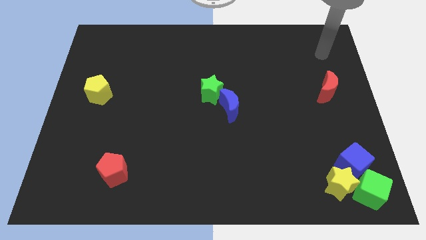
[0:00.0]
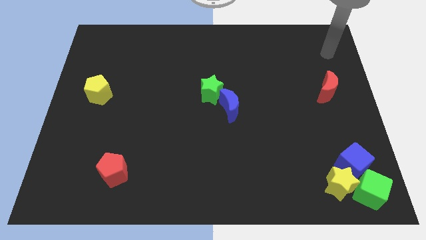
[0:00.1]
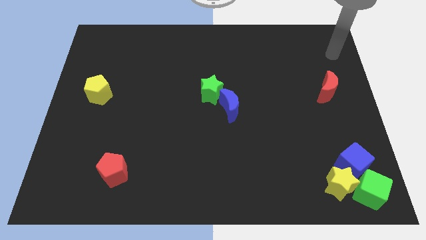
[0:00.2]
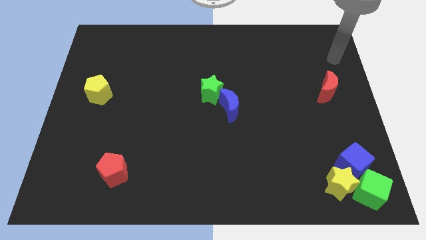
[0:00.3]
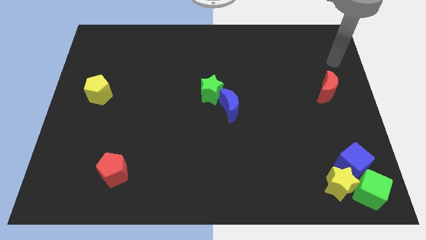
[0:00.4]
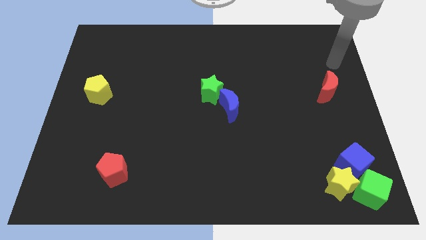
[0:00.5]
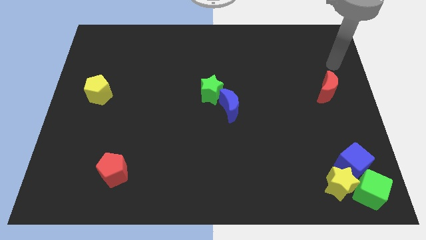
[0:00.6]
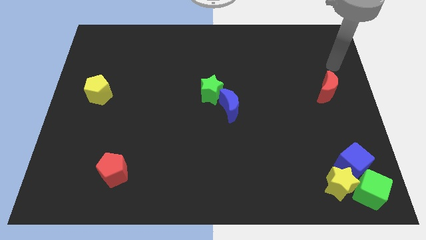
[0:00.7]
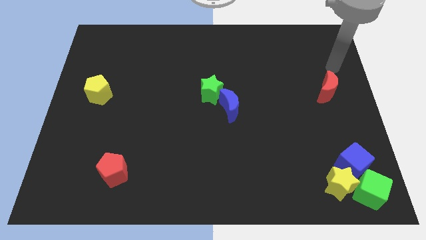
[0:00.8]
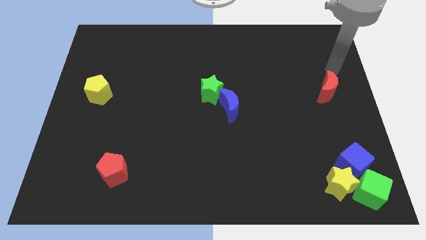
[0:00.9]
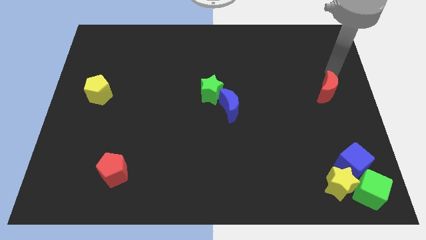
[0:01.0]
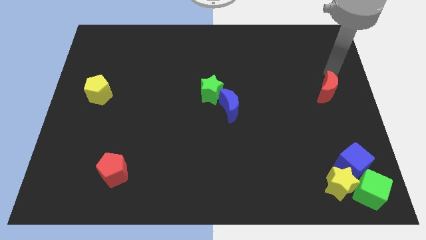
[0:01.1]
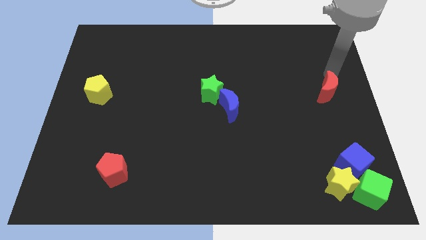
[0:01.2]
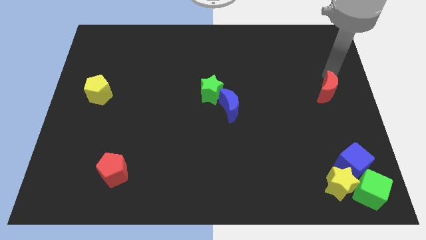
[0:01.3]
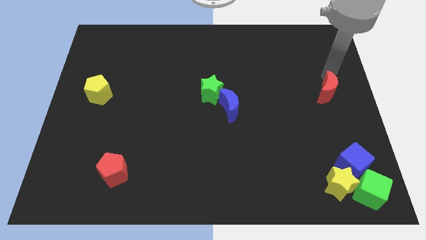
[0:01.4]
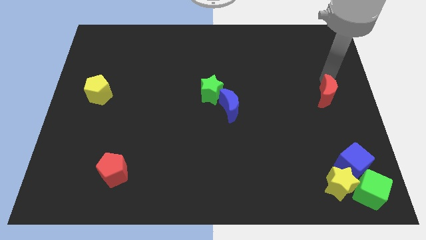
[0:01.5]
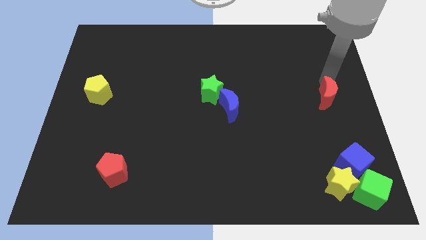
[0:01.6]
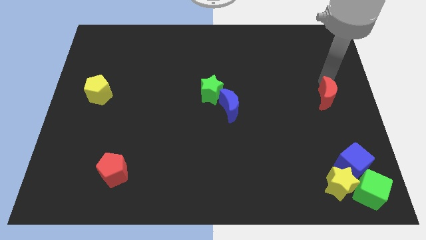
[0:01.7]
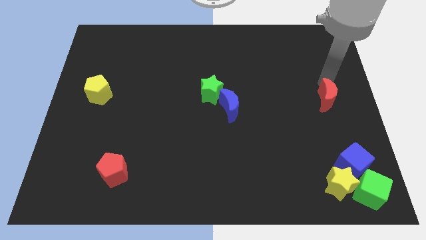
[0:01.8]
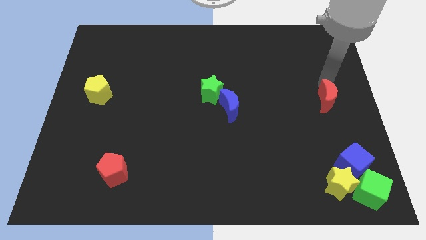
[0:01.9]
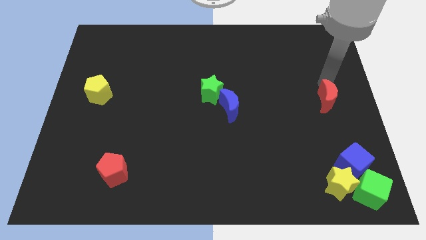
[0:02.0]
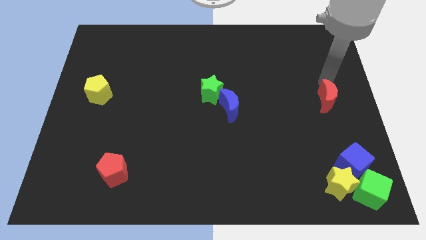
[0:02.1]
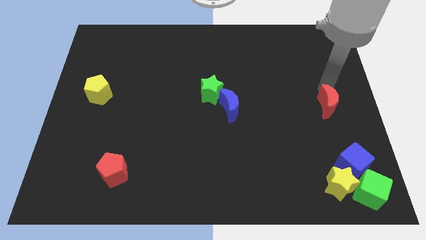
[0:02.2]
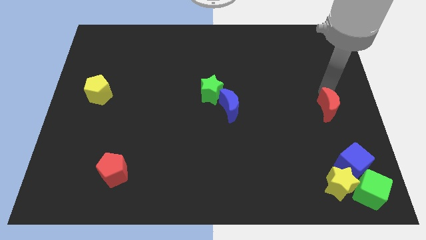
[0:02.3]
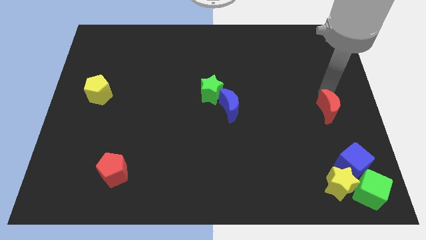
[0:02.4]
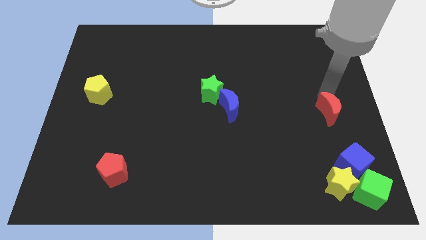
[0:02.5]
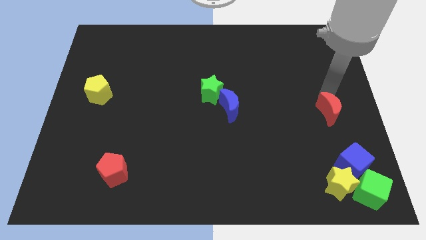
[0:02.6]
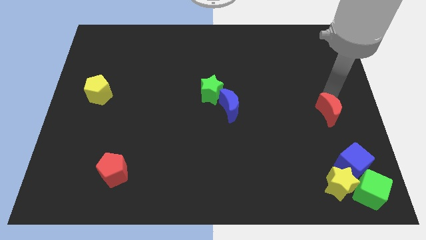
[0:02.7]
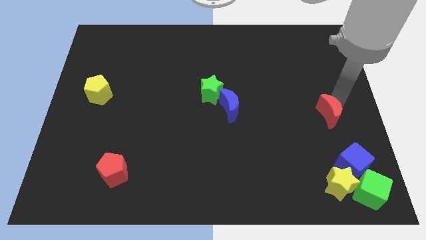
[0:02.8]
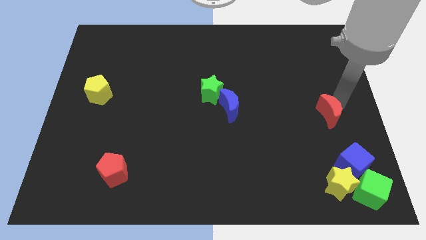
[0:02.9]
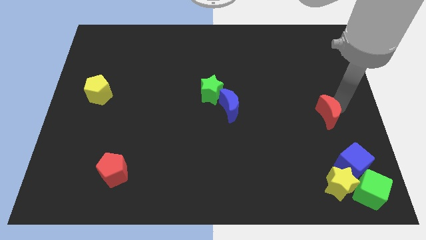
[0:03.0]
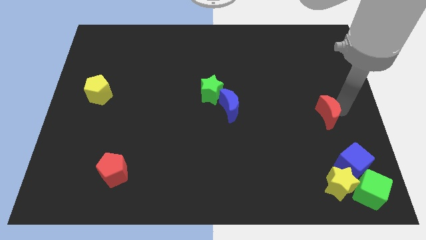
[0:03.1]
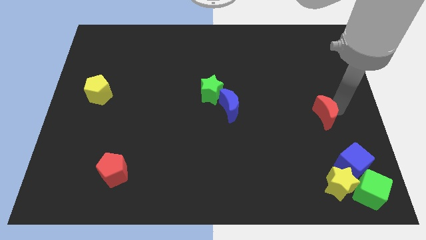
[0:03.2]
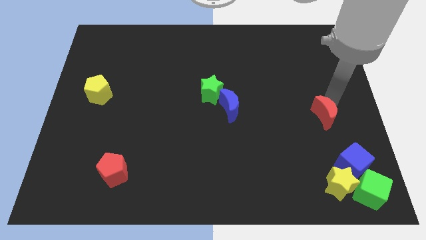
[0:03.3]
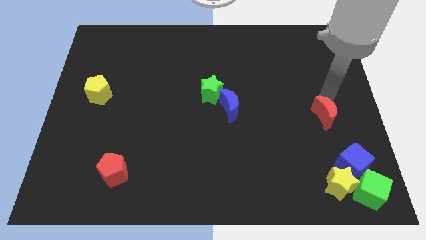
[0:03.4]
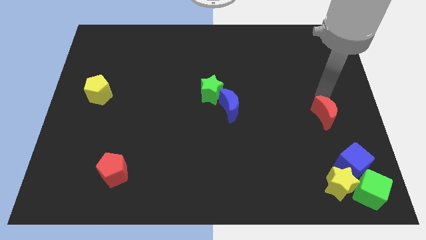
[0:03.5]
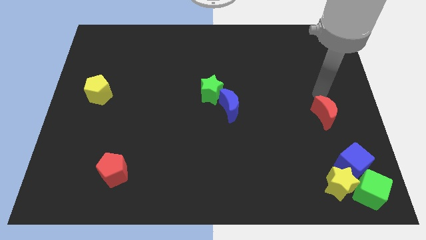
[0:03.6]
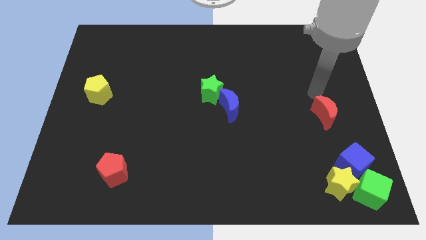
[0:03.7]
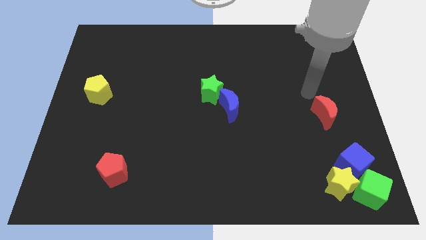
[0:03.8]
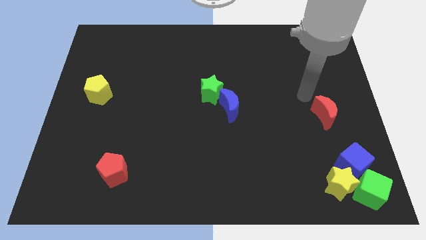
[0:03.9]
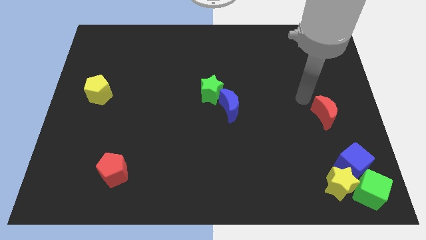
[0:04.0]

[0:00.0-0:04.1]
place red moon to the right of blue moon

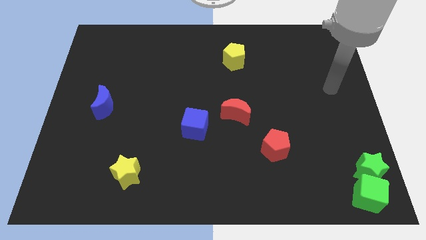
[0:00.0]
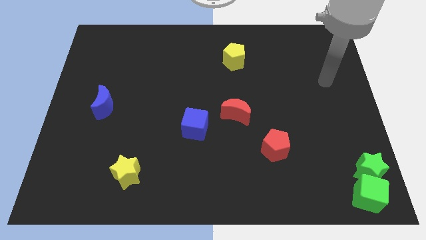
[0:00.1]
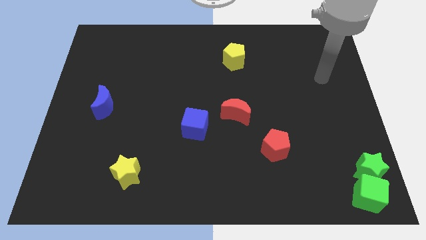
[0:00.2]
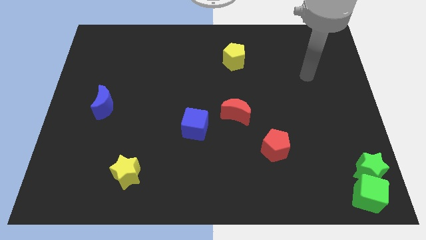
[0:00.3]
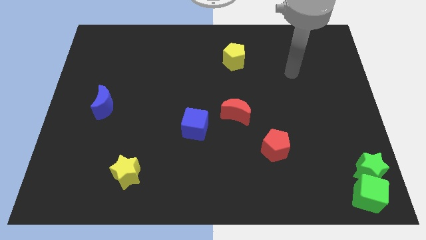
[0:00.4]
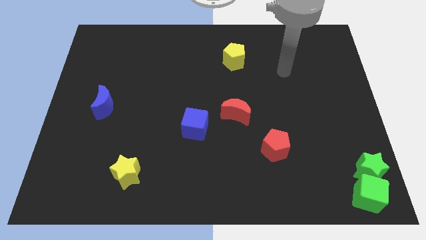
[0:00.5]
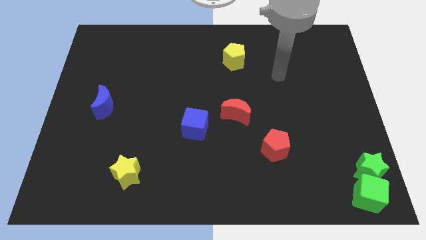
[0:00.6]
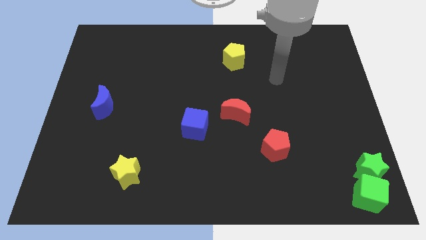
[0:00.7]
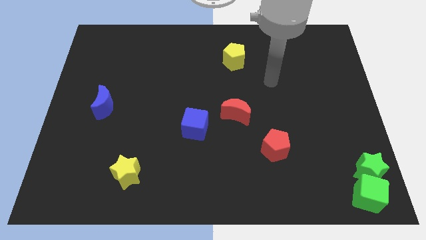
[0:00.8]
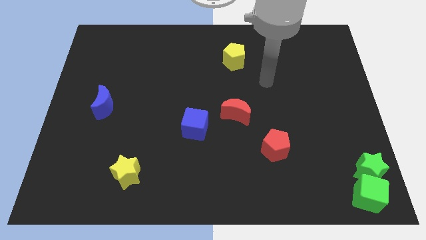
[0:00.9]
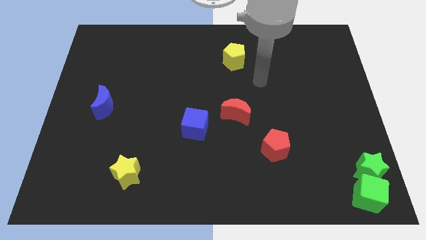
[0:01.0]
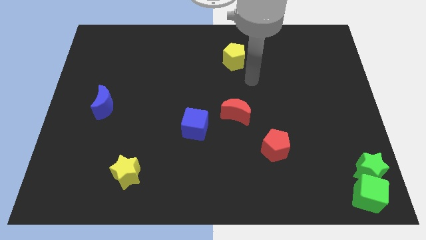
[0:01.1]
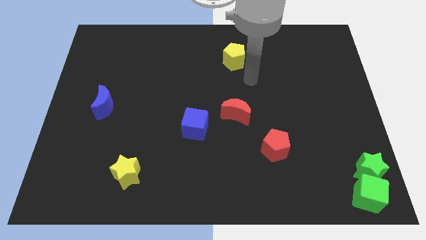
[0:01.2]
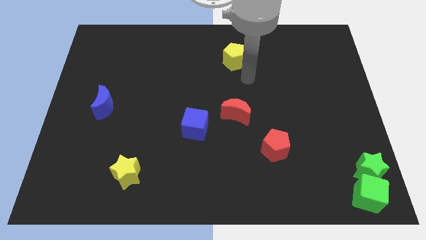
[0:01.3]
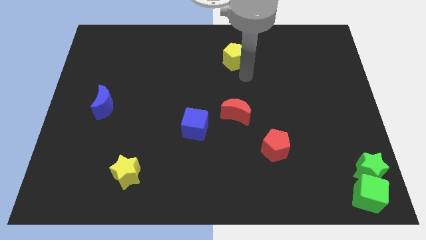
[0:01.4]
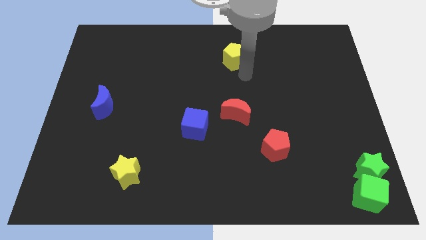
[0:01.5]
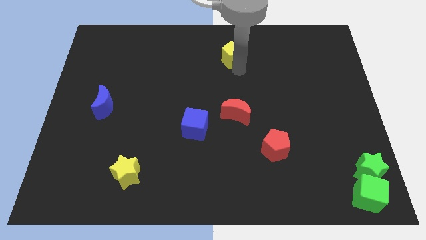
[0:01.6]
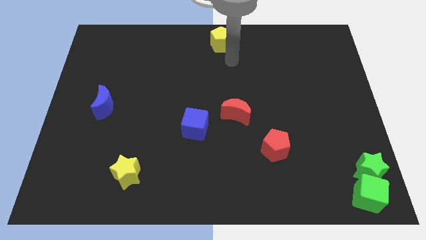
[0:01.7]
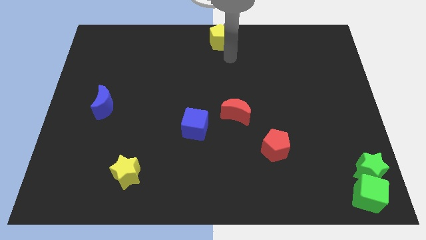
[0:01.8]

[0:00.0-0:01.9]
move yellow pentagon to the top middle of the board

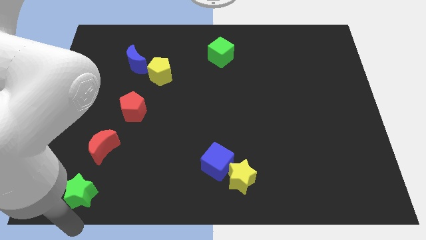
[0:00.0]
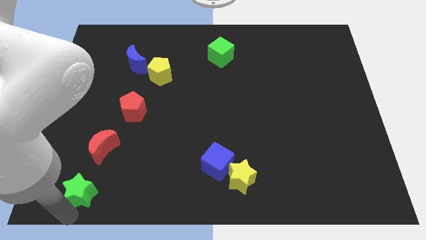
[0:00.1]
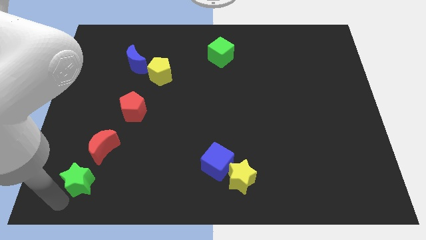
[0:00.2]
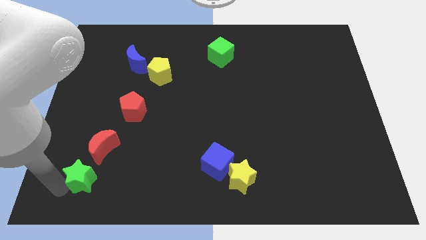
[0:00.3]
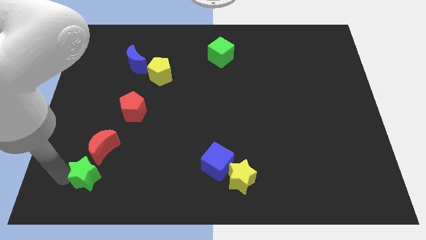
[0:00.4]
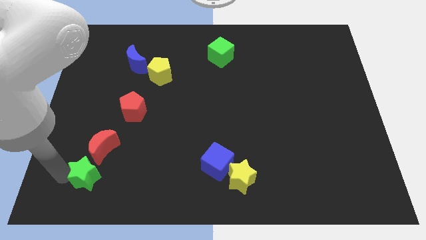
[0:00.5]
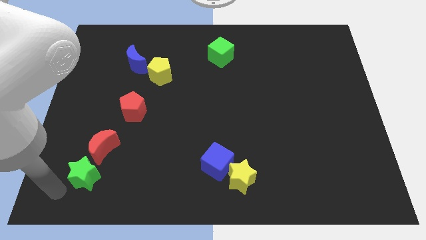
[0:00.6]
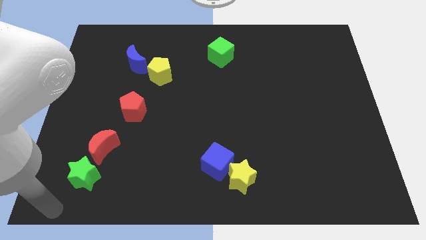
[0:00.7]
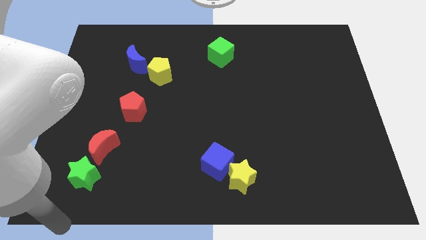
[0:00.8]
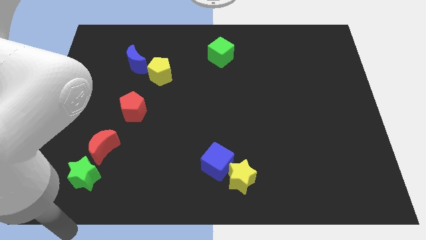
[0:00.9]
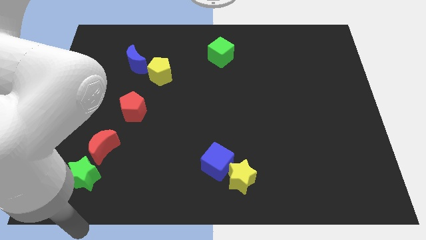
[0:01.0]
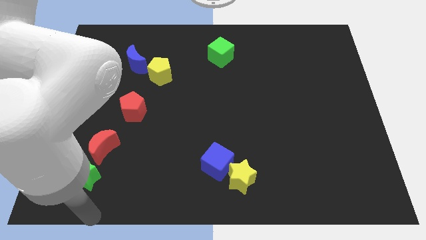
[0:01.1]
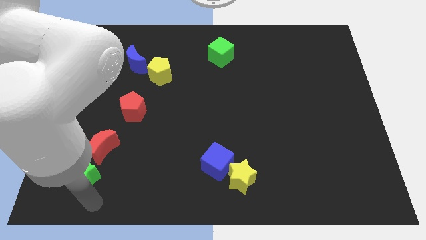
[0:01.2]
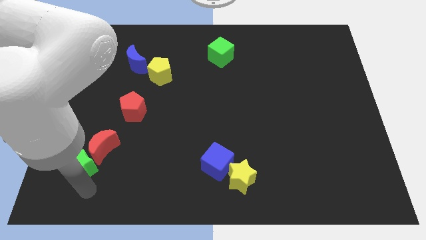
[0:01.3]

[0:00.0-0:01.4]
push green star below red moon

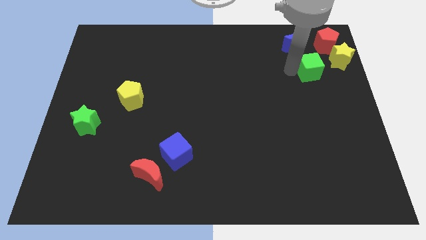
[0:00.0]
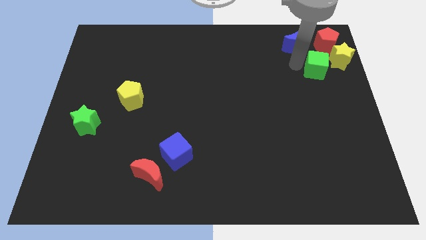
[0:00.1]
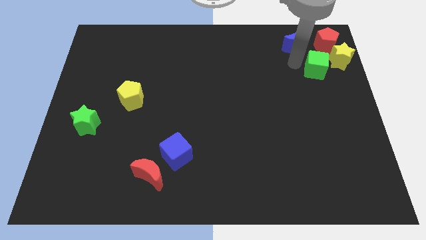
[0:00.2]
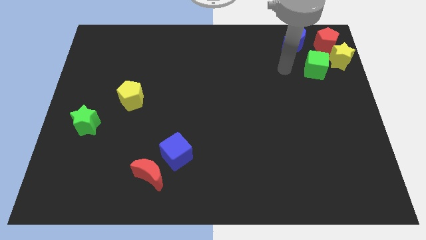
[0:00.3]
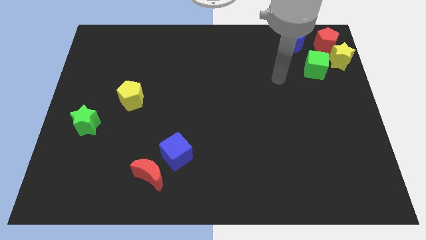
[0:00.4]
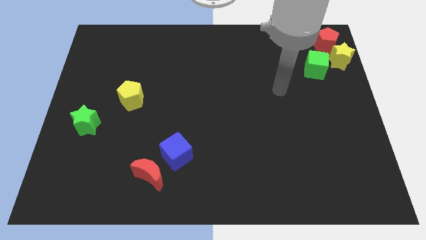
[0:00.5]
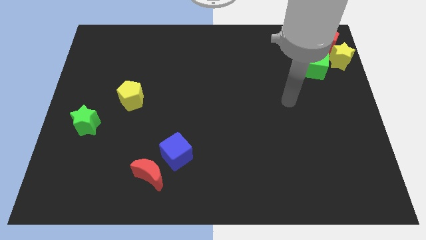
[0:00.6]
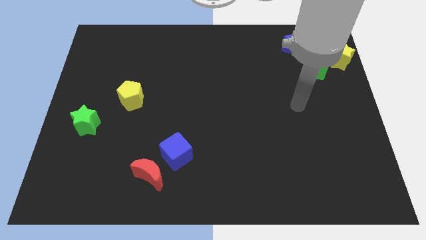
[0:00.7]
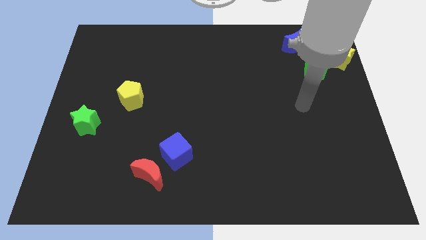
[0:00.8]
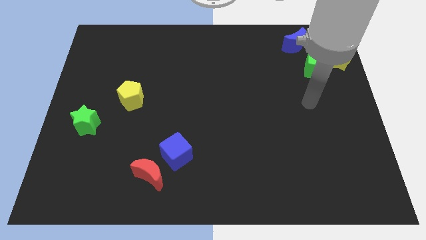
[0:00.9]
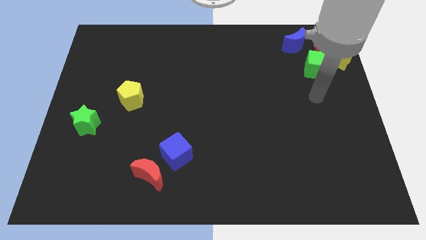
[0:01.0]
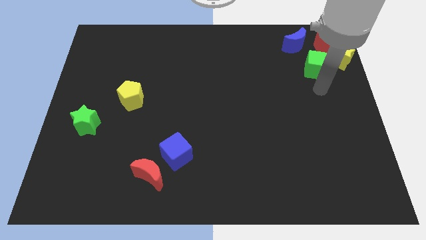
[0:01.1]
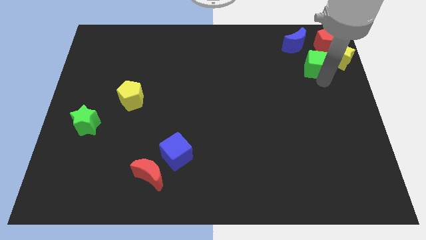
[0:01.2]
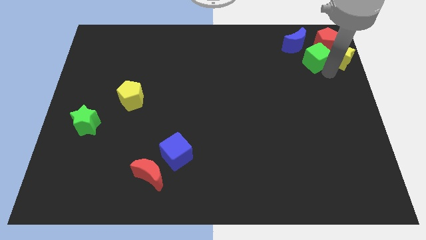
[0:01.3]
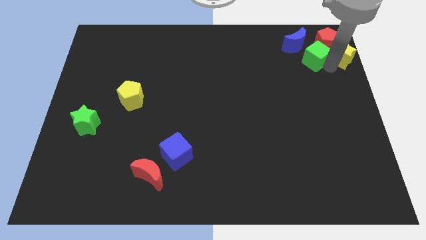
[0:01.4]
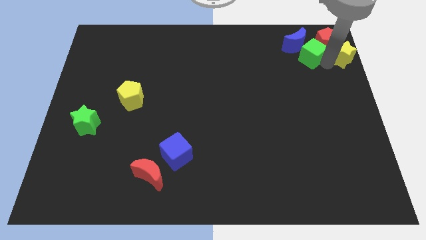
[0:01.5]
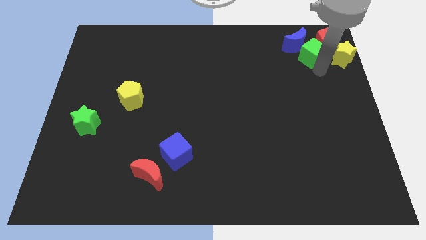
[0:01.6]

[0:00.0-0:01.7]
push the green cube into the red pentagon

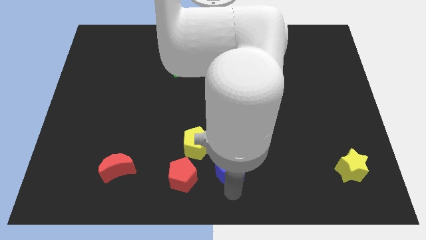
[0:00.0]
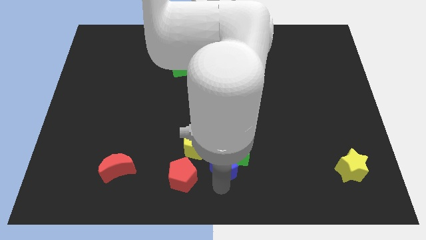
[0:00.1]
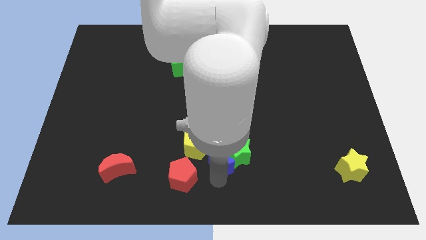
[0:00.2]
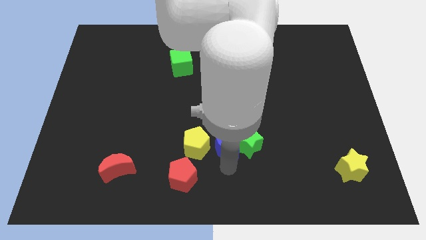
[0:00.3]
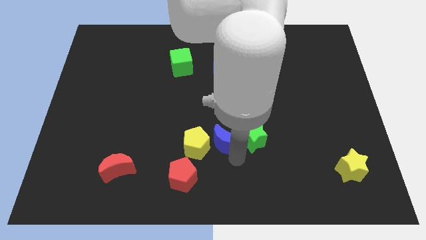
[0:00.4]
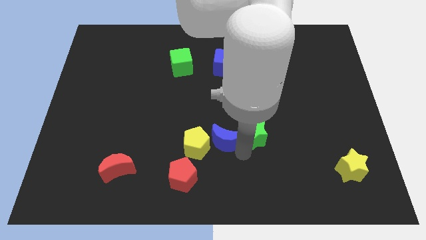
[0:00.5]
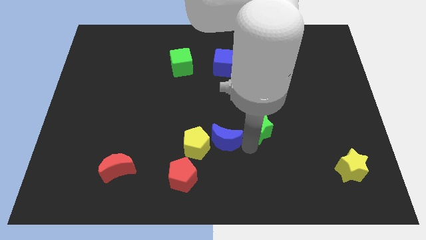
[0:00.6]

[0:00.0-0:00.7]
place blue crescent beside yellow pentagon
